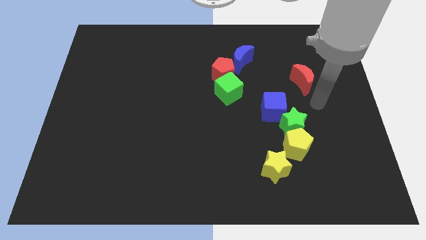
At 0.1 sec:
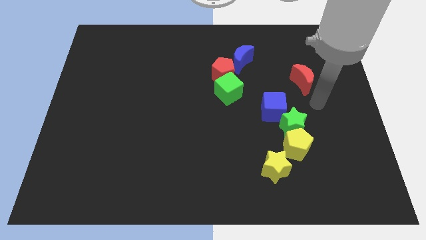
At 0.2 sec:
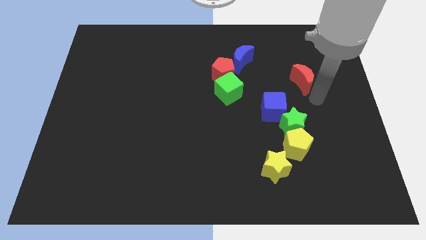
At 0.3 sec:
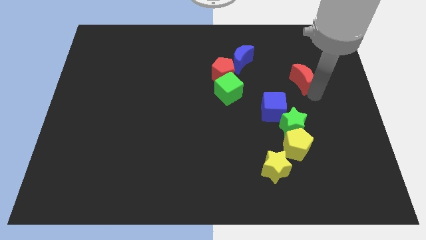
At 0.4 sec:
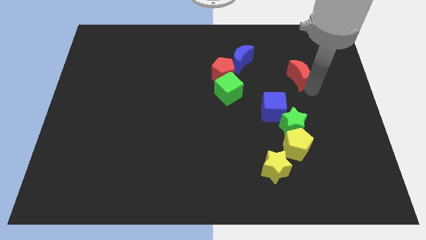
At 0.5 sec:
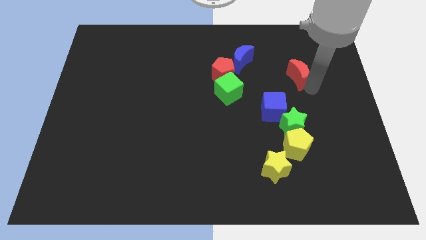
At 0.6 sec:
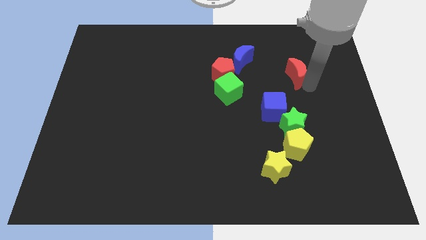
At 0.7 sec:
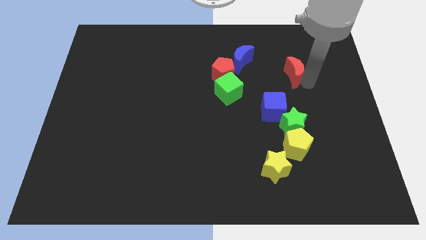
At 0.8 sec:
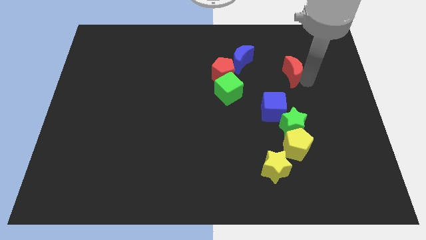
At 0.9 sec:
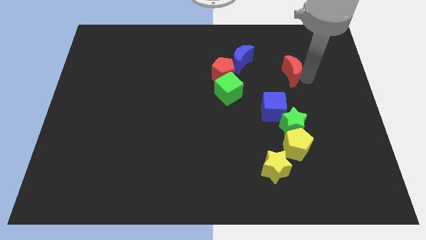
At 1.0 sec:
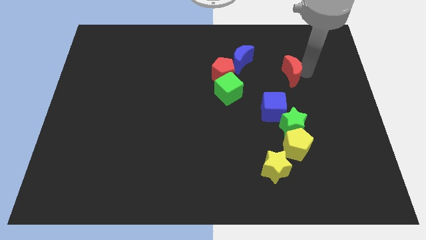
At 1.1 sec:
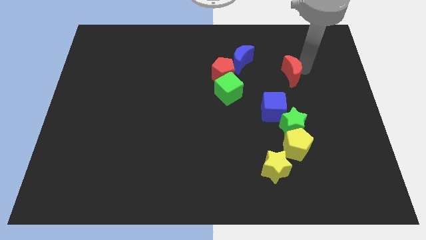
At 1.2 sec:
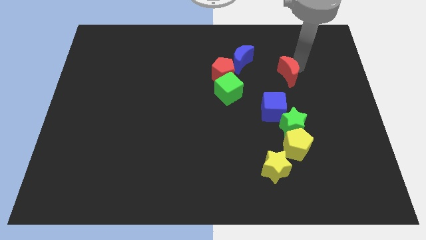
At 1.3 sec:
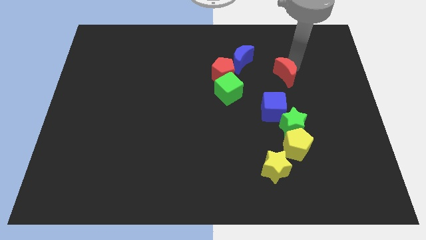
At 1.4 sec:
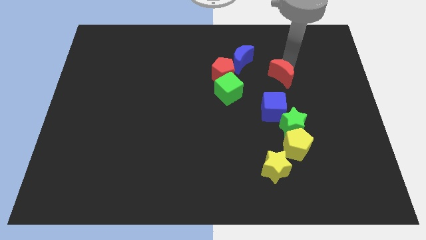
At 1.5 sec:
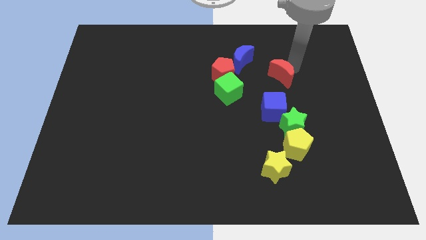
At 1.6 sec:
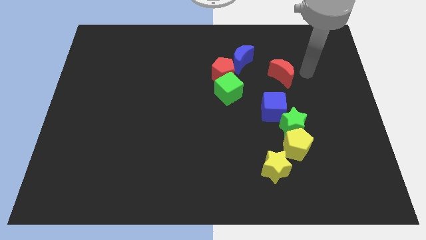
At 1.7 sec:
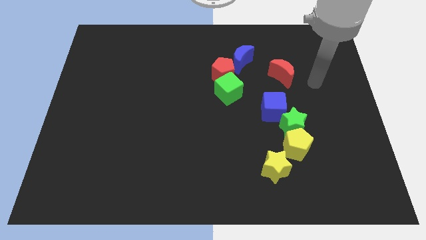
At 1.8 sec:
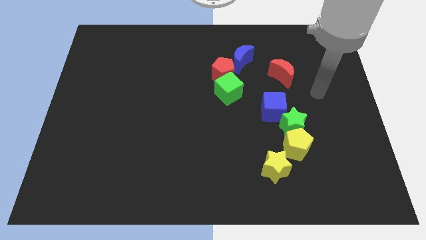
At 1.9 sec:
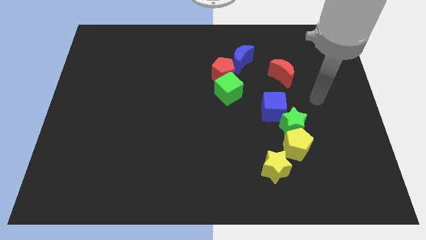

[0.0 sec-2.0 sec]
slide the red moon vertically above the blue cube

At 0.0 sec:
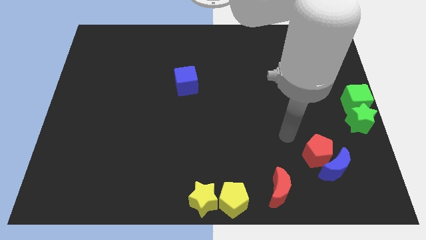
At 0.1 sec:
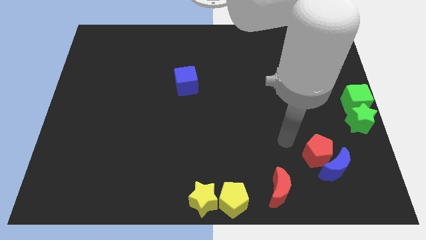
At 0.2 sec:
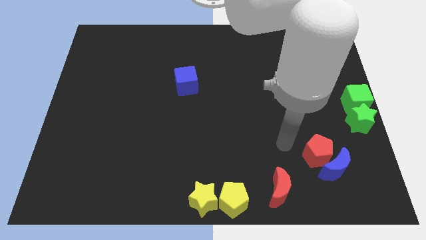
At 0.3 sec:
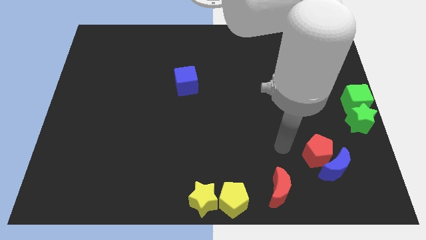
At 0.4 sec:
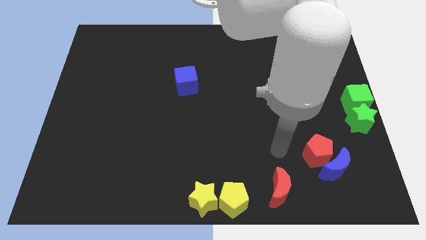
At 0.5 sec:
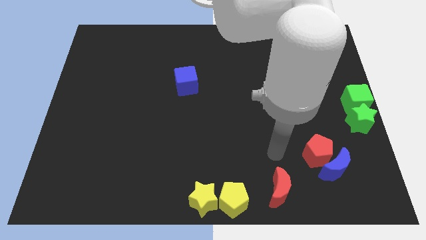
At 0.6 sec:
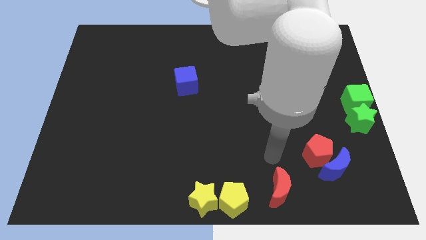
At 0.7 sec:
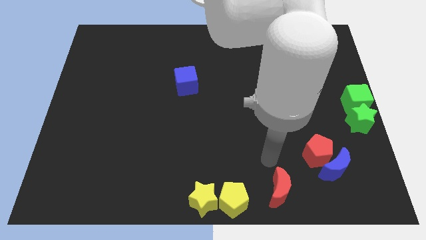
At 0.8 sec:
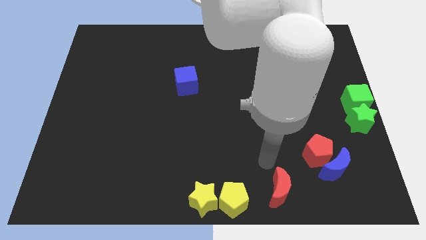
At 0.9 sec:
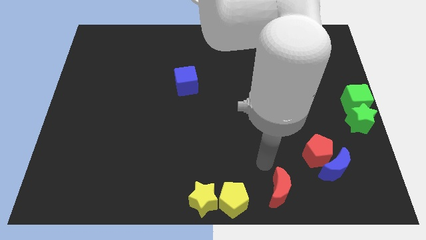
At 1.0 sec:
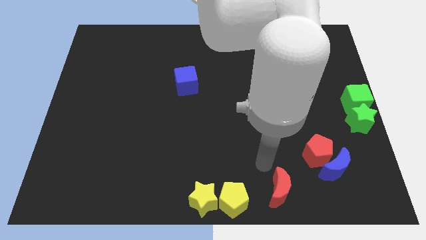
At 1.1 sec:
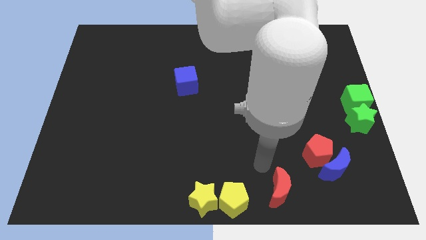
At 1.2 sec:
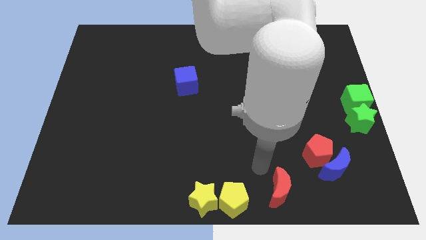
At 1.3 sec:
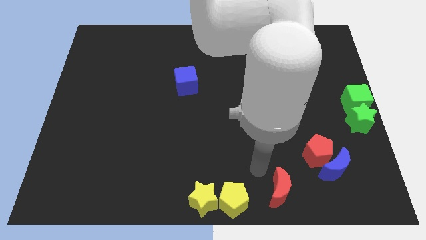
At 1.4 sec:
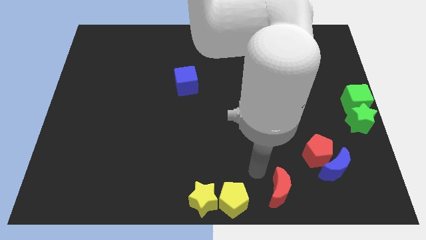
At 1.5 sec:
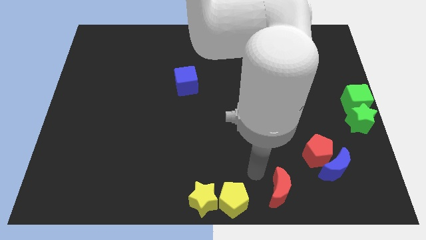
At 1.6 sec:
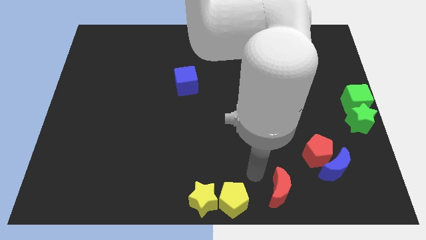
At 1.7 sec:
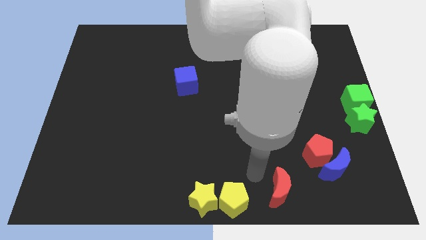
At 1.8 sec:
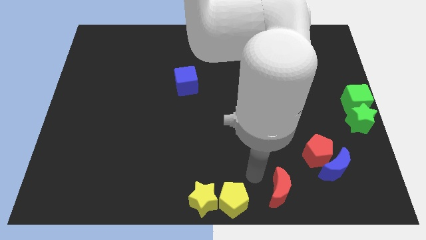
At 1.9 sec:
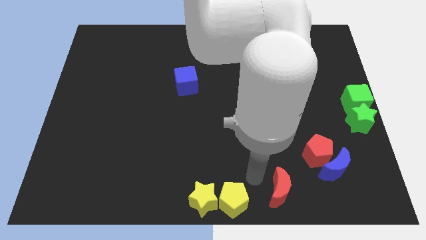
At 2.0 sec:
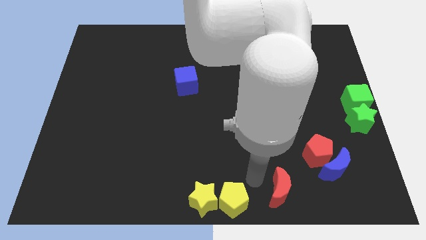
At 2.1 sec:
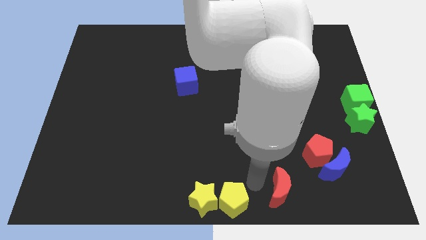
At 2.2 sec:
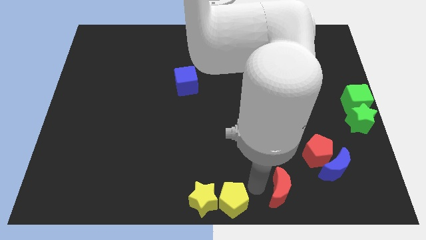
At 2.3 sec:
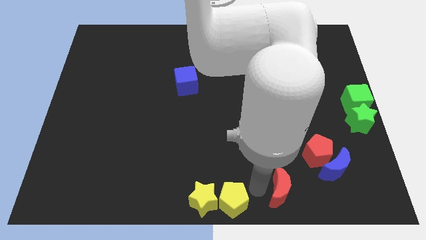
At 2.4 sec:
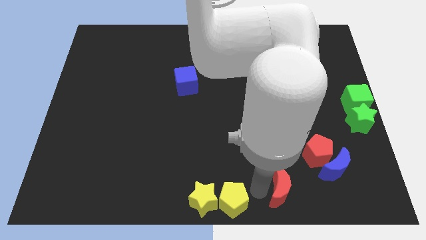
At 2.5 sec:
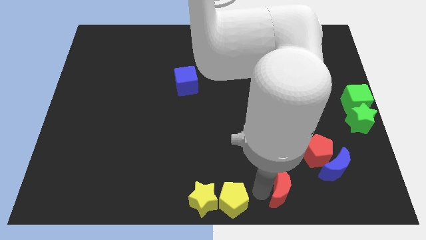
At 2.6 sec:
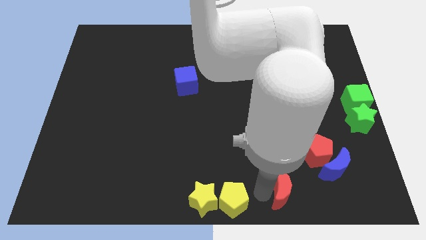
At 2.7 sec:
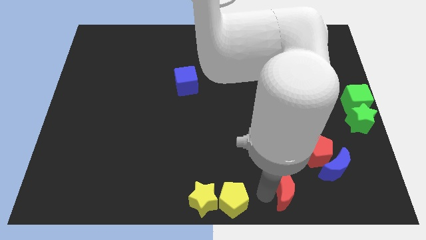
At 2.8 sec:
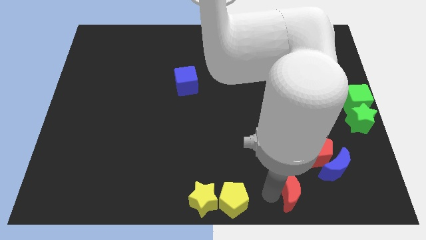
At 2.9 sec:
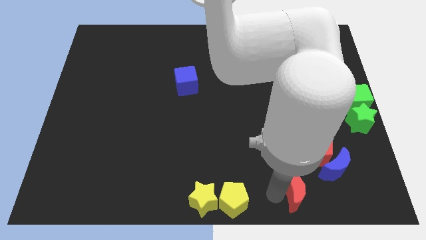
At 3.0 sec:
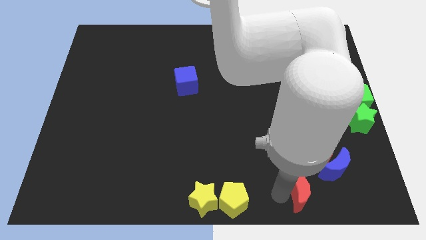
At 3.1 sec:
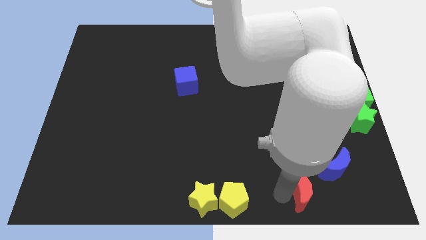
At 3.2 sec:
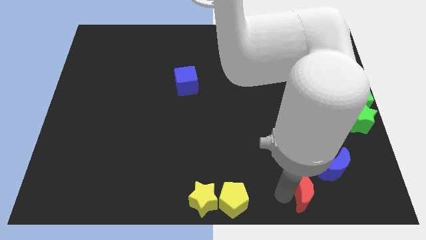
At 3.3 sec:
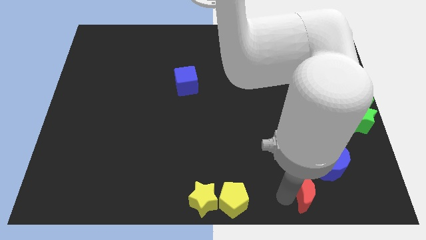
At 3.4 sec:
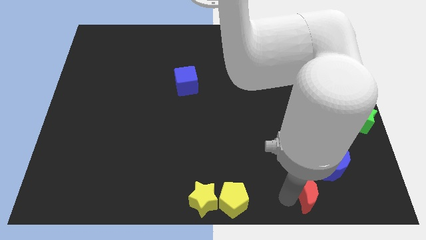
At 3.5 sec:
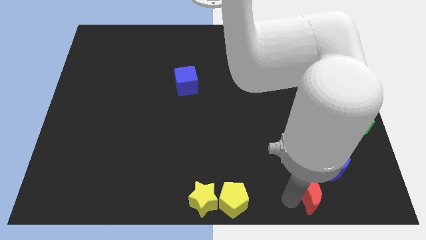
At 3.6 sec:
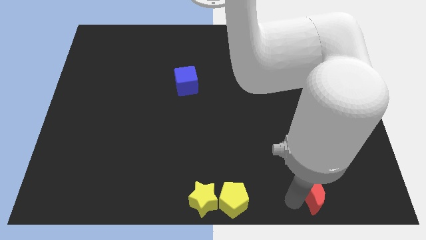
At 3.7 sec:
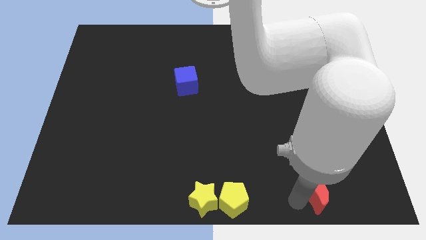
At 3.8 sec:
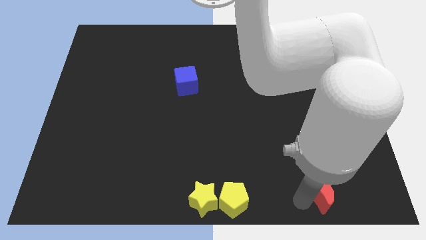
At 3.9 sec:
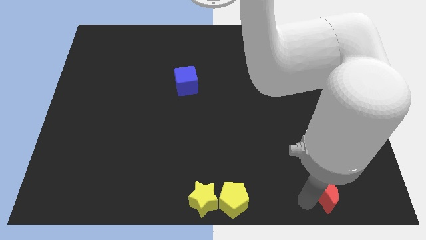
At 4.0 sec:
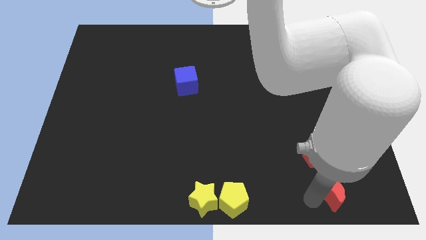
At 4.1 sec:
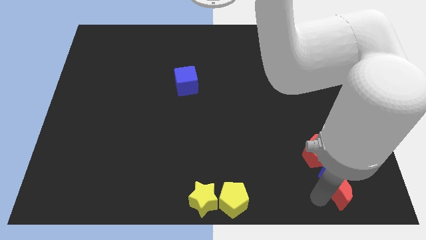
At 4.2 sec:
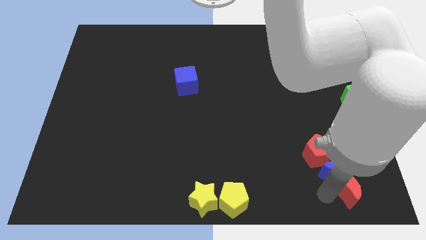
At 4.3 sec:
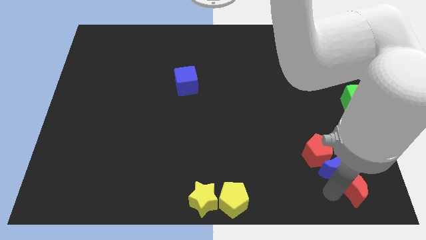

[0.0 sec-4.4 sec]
push the red moon into the blue moon

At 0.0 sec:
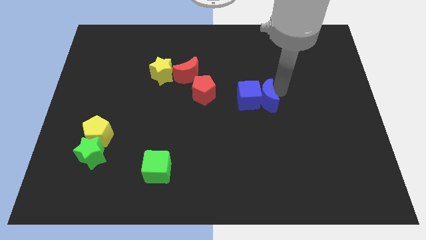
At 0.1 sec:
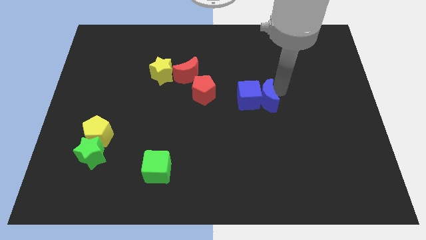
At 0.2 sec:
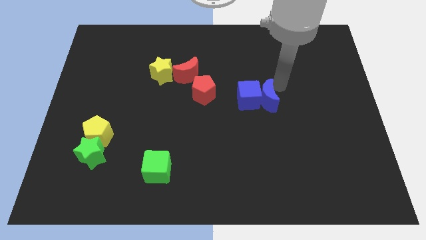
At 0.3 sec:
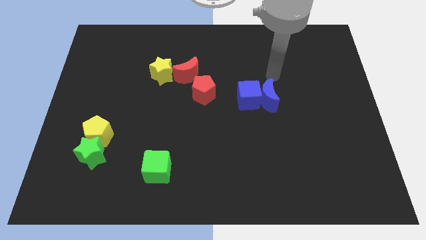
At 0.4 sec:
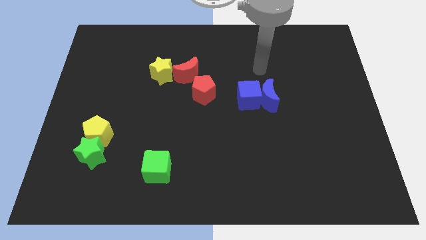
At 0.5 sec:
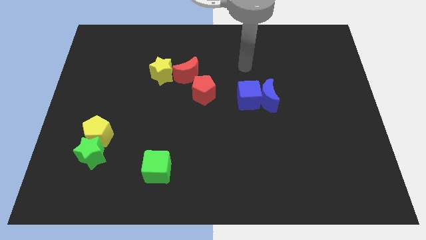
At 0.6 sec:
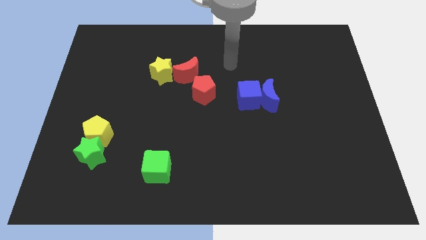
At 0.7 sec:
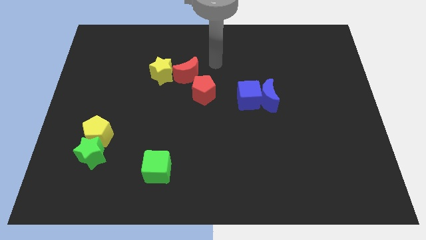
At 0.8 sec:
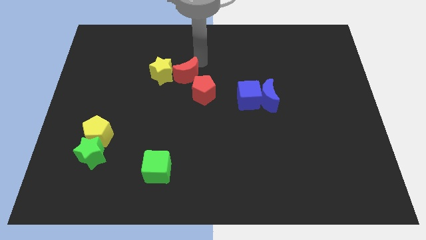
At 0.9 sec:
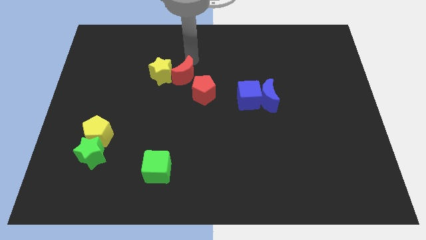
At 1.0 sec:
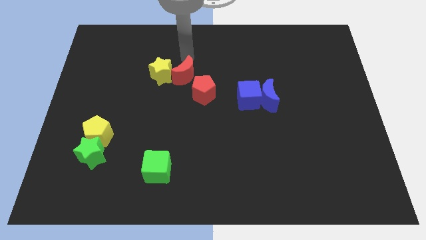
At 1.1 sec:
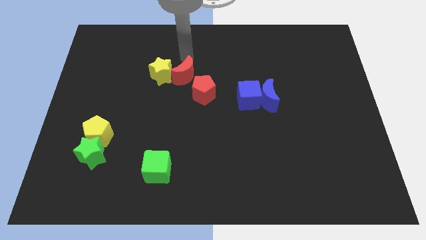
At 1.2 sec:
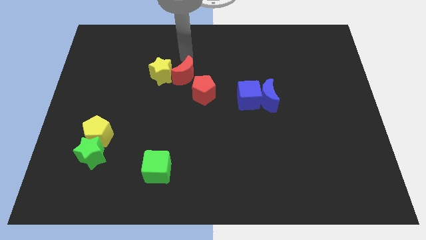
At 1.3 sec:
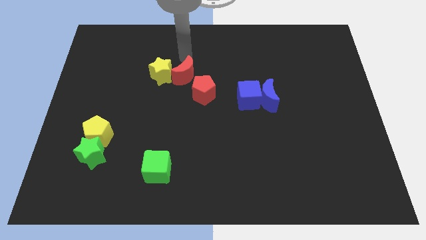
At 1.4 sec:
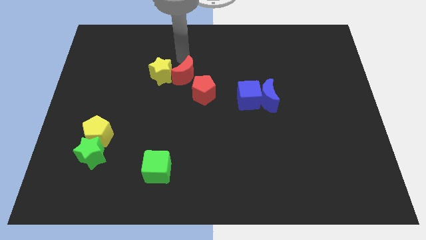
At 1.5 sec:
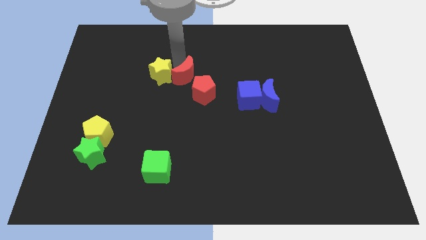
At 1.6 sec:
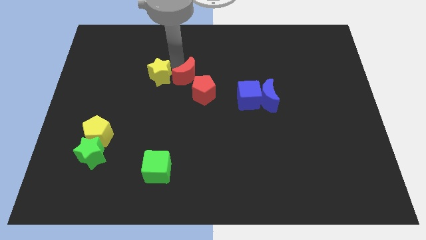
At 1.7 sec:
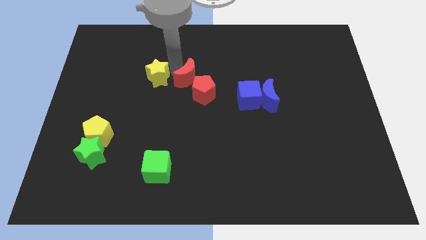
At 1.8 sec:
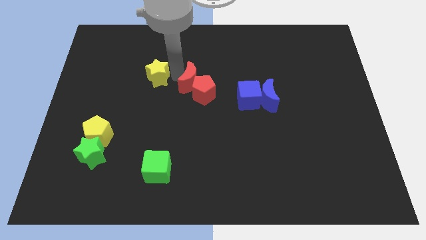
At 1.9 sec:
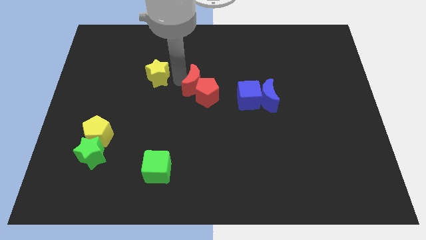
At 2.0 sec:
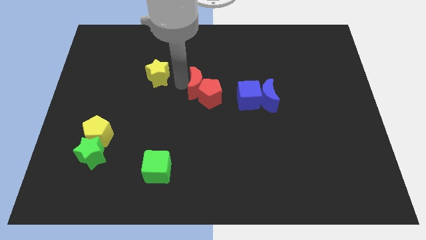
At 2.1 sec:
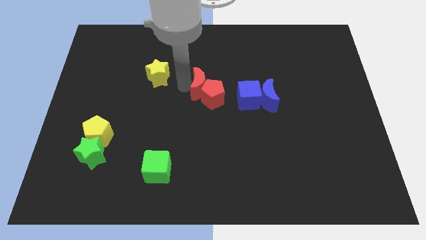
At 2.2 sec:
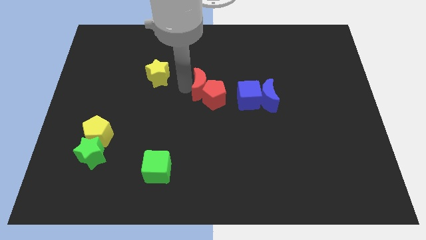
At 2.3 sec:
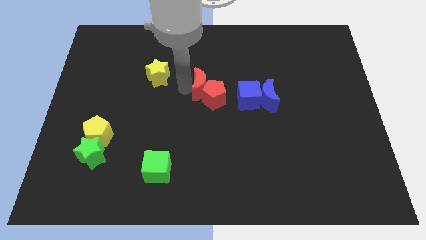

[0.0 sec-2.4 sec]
move the red crescent along with red pentagon to the center of the board
